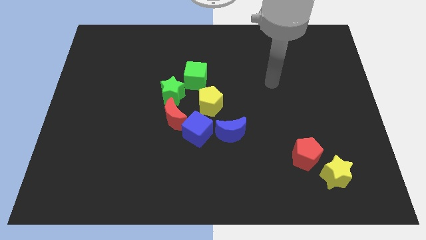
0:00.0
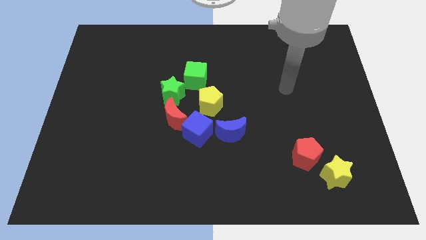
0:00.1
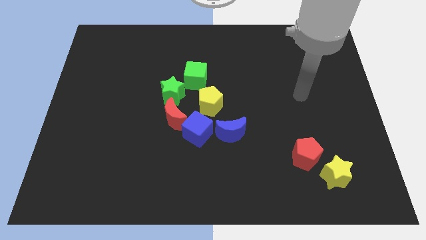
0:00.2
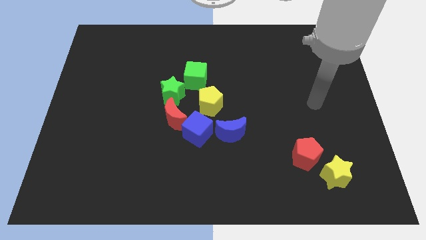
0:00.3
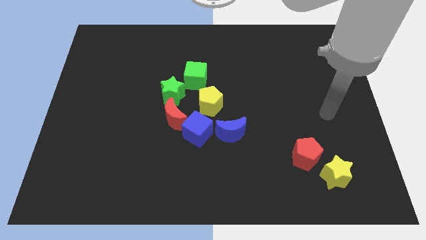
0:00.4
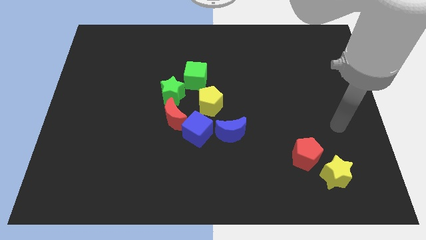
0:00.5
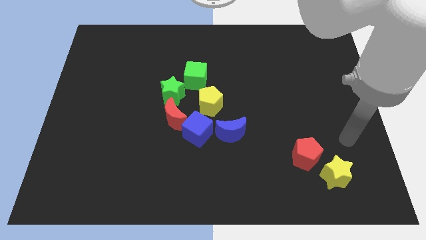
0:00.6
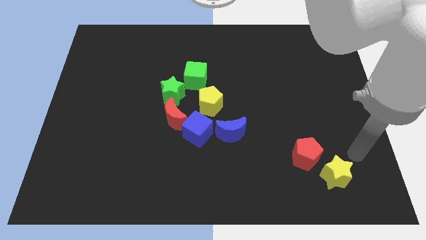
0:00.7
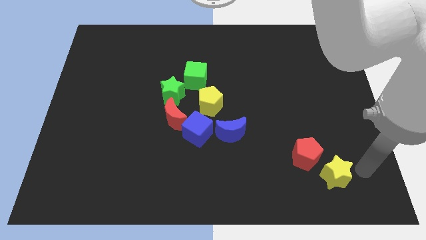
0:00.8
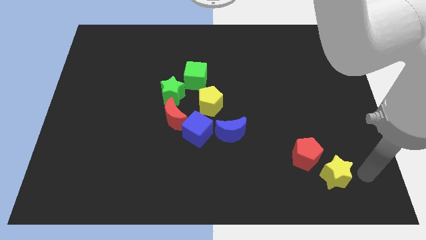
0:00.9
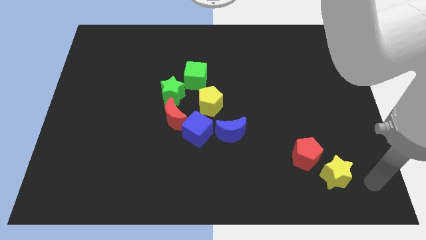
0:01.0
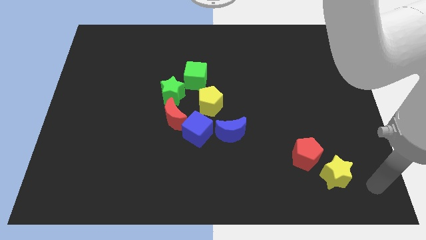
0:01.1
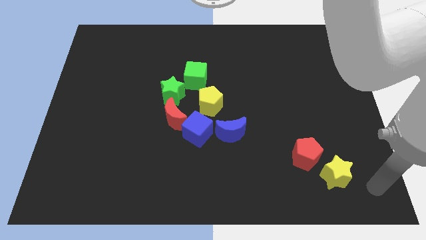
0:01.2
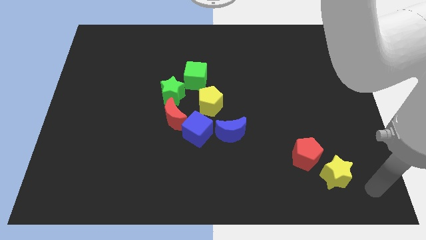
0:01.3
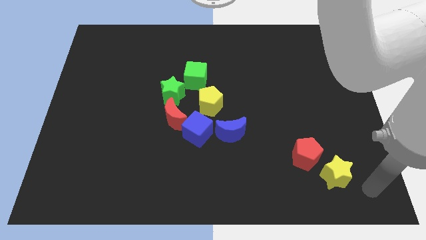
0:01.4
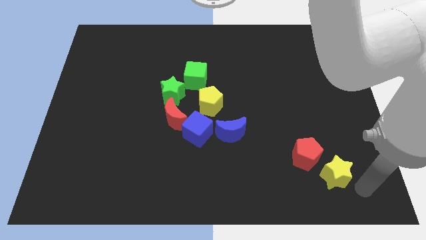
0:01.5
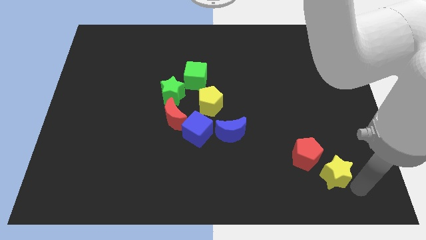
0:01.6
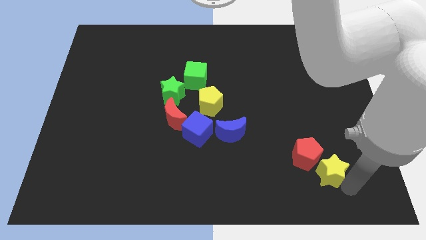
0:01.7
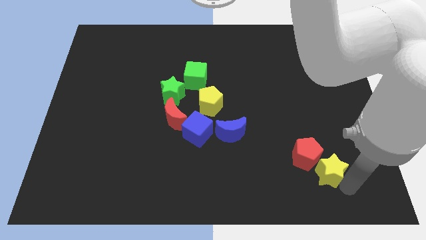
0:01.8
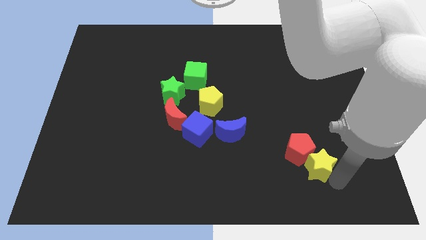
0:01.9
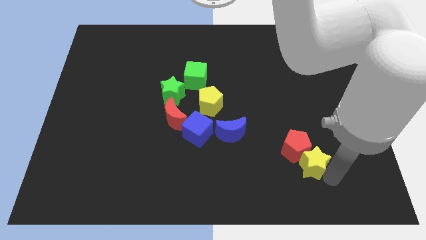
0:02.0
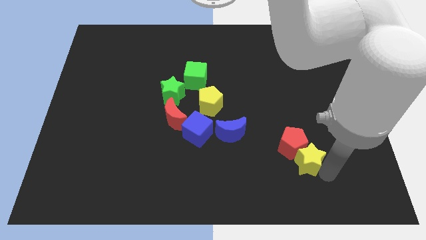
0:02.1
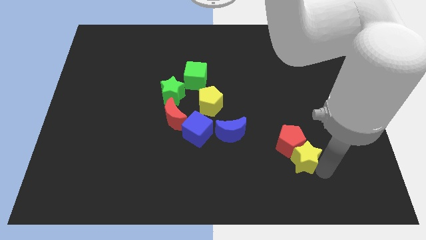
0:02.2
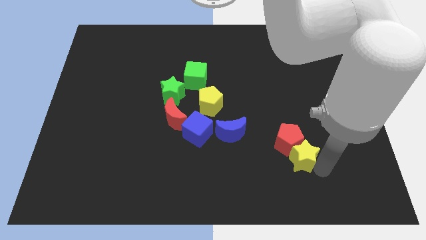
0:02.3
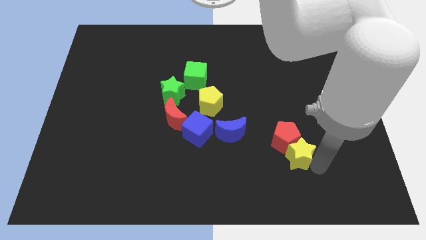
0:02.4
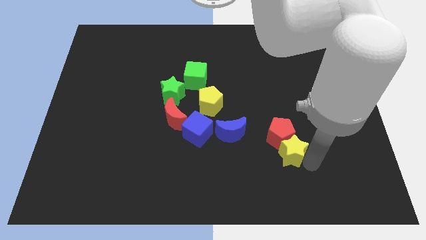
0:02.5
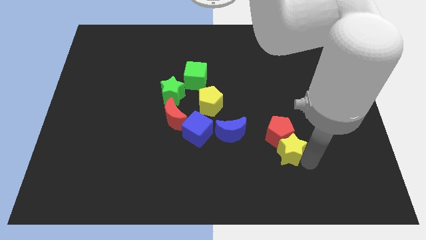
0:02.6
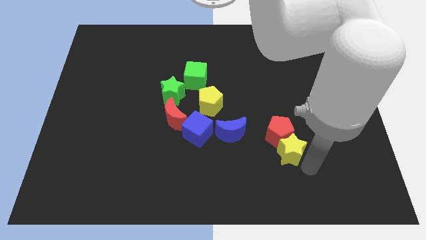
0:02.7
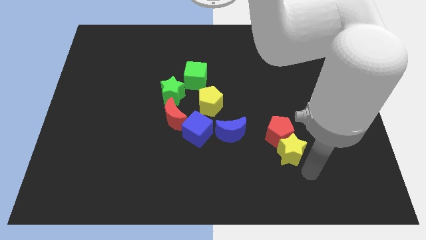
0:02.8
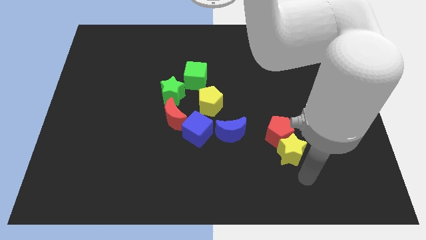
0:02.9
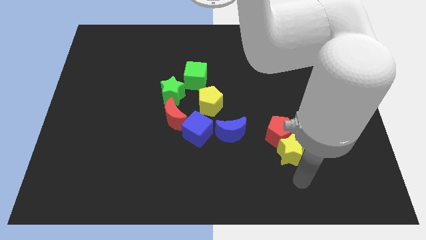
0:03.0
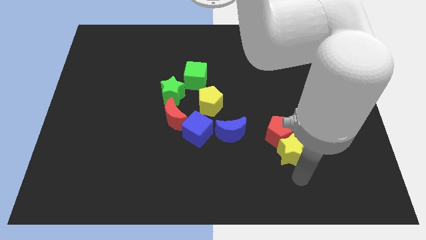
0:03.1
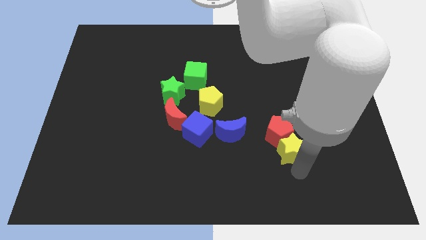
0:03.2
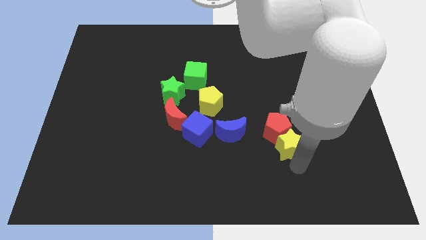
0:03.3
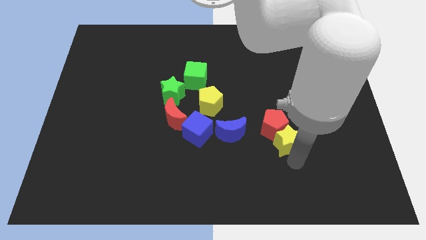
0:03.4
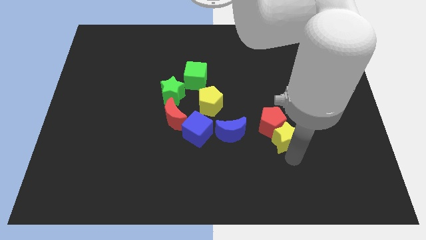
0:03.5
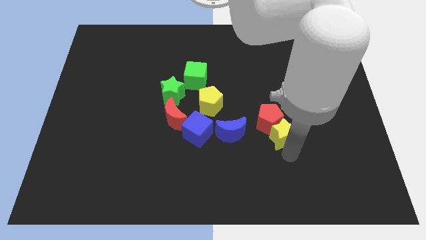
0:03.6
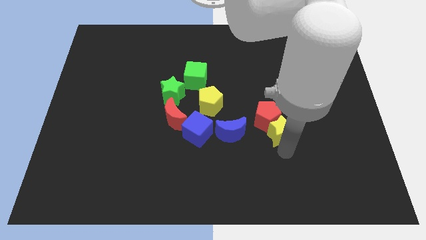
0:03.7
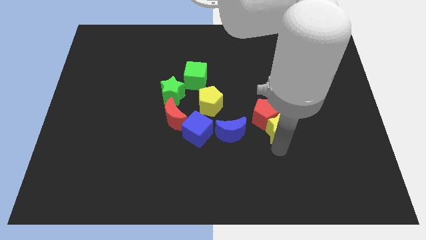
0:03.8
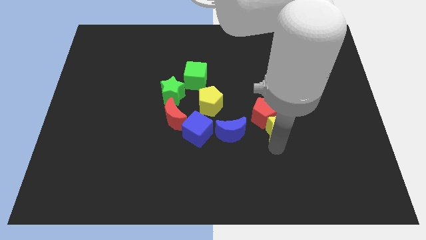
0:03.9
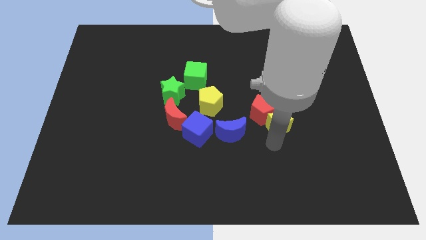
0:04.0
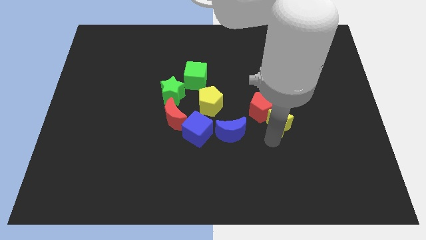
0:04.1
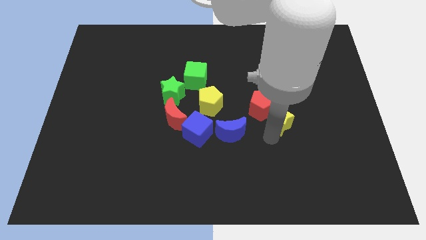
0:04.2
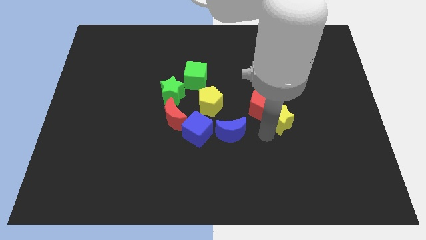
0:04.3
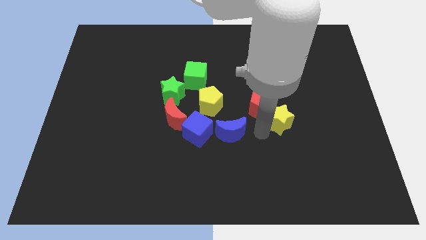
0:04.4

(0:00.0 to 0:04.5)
move the yellow star slightly towards the center of the board

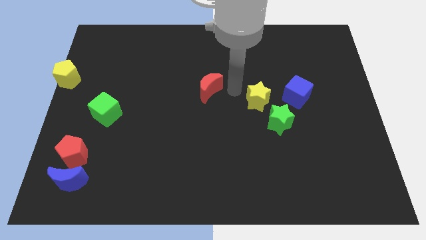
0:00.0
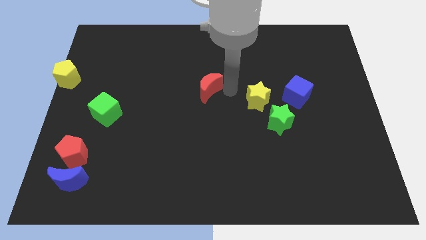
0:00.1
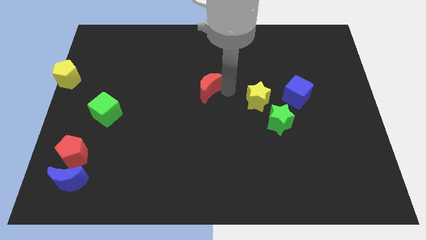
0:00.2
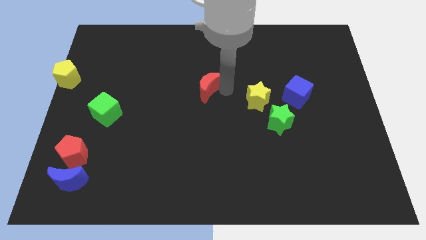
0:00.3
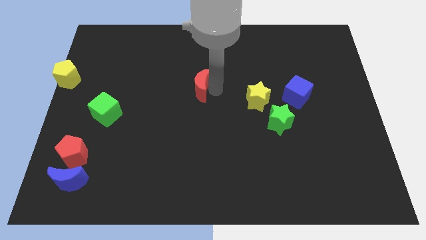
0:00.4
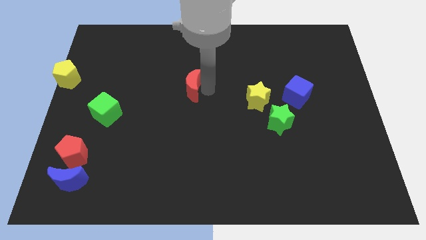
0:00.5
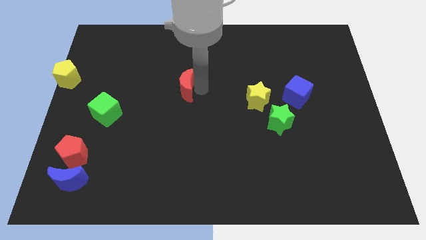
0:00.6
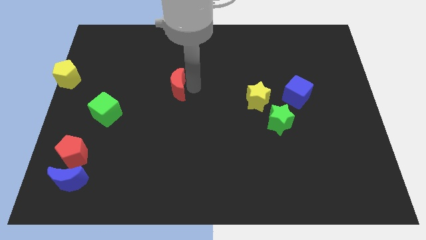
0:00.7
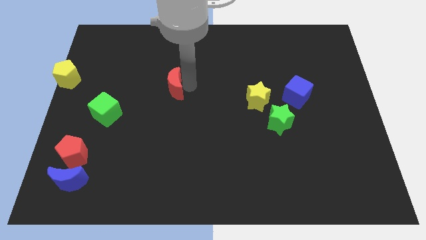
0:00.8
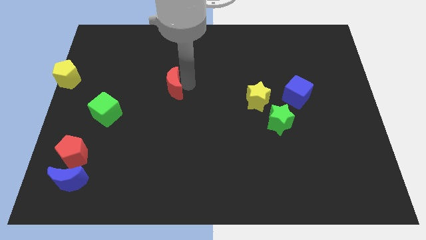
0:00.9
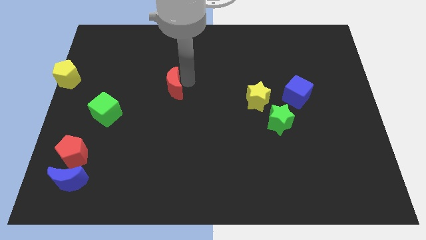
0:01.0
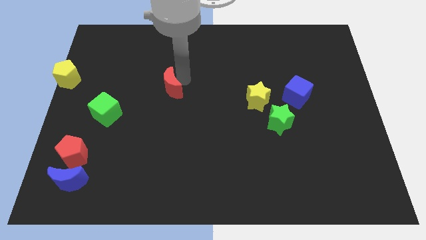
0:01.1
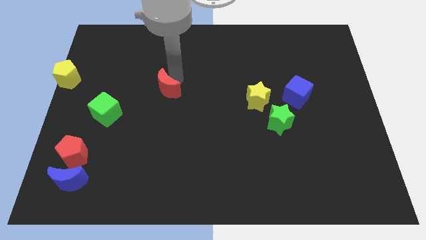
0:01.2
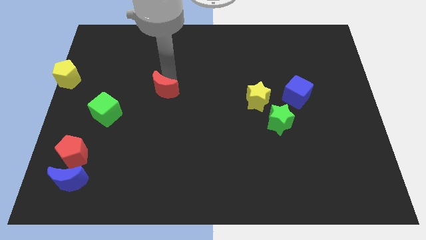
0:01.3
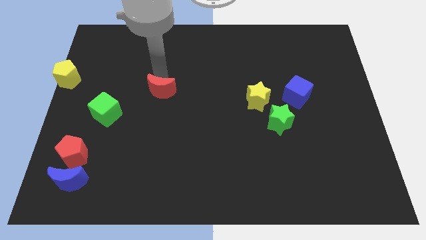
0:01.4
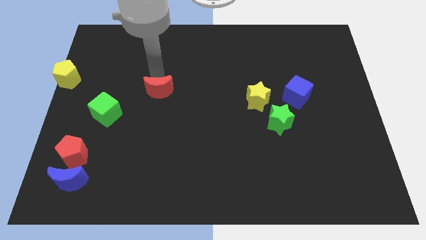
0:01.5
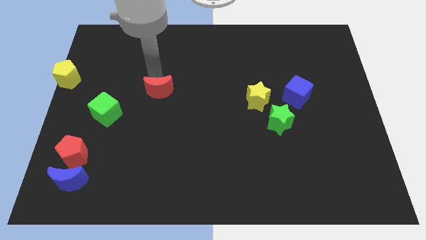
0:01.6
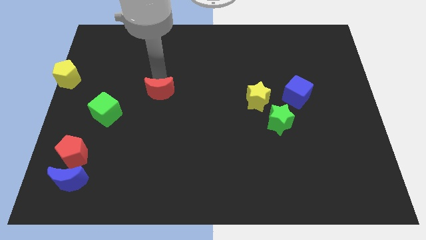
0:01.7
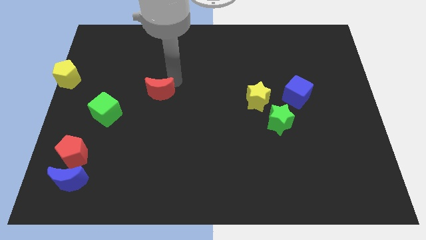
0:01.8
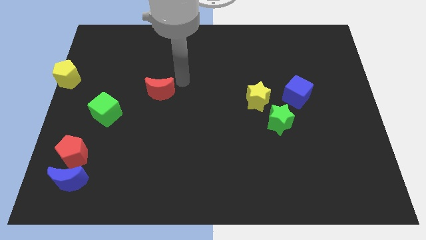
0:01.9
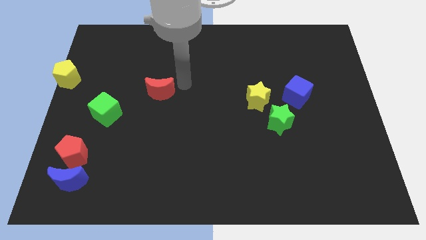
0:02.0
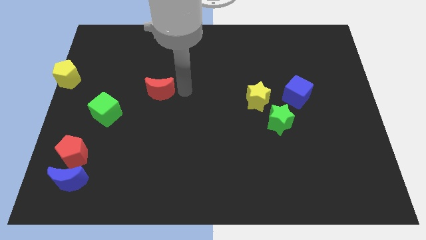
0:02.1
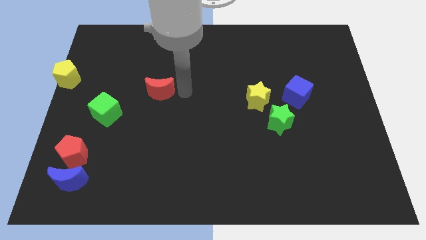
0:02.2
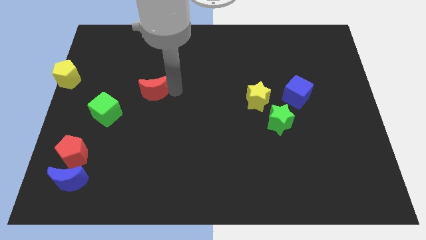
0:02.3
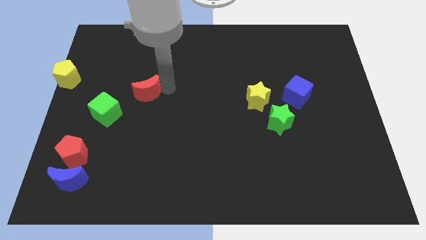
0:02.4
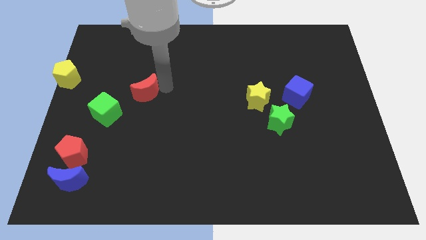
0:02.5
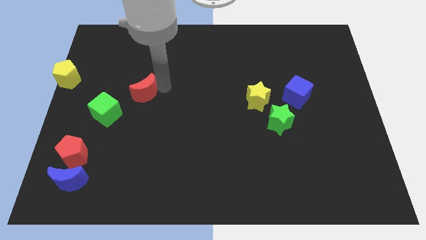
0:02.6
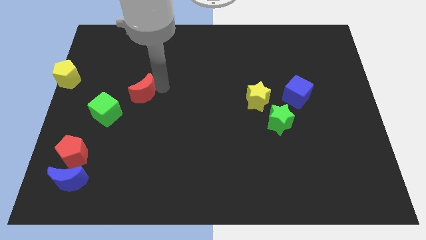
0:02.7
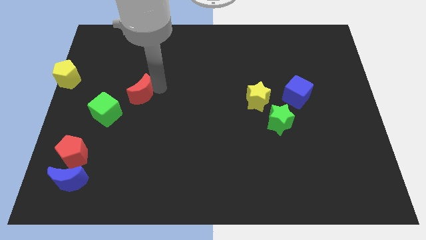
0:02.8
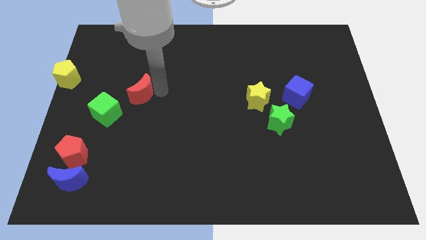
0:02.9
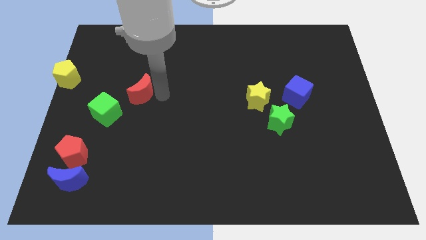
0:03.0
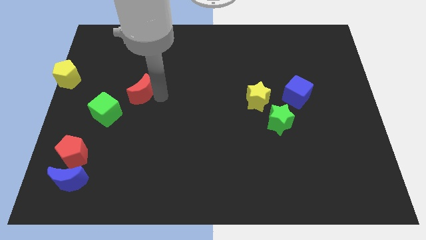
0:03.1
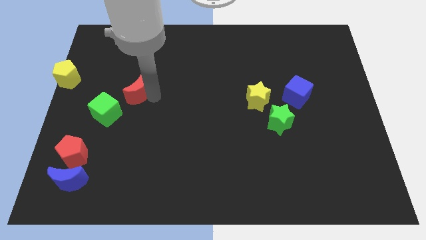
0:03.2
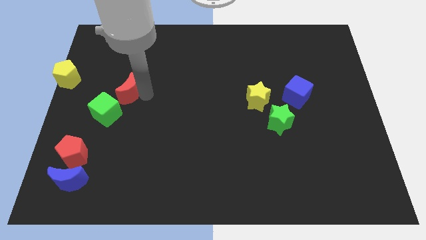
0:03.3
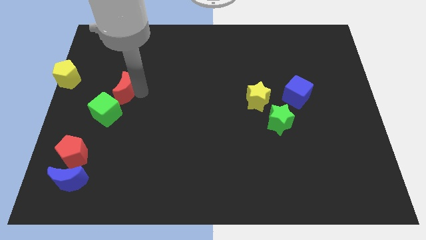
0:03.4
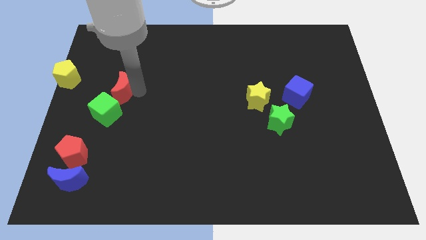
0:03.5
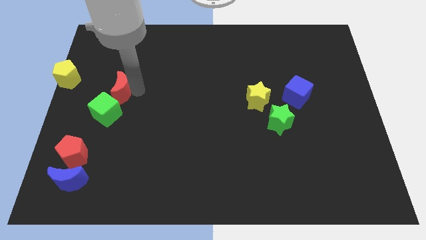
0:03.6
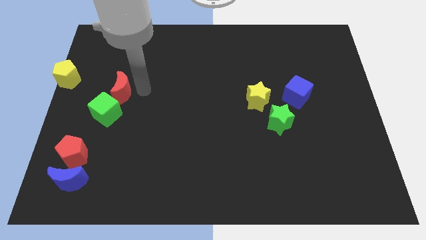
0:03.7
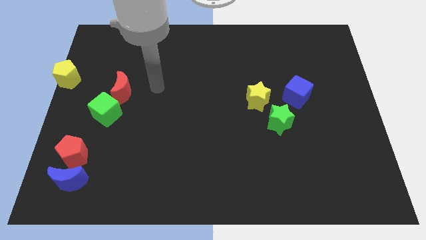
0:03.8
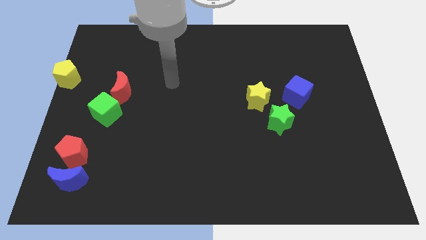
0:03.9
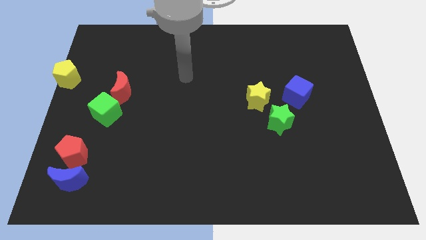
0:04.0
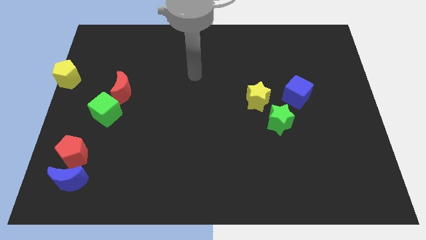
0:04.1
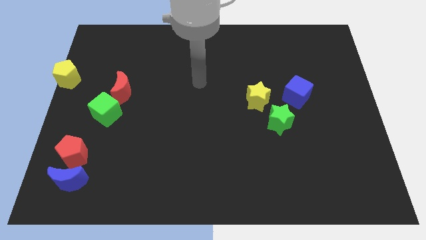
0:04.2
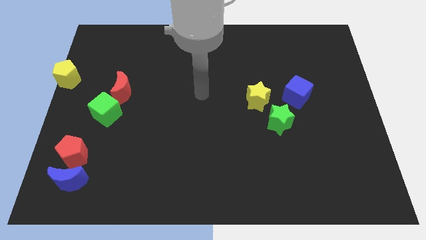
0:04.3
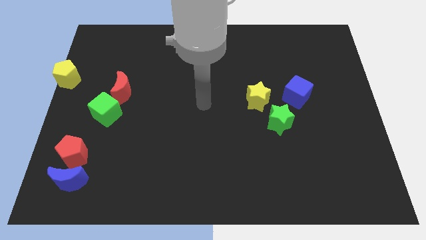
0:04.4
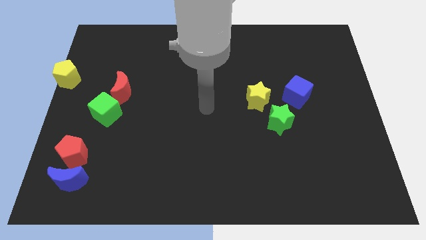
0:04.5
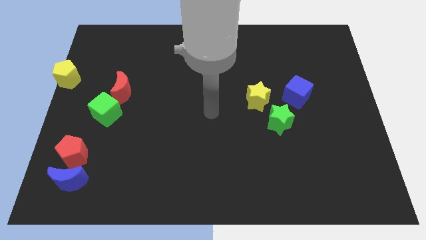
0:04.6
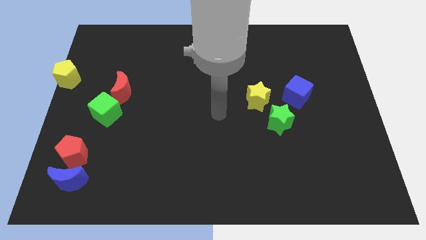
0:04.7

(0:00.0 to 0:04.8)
place the red crescent above the green cube
